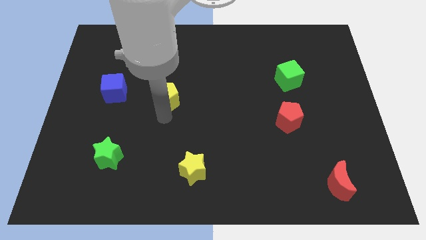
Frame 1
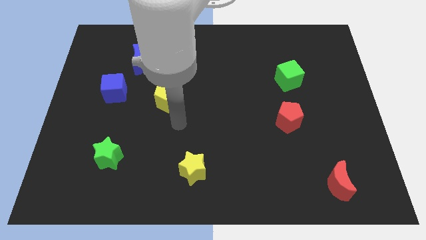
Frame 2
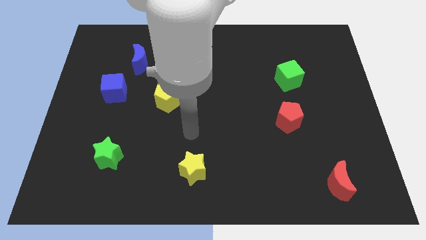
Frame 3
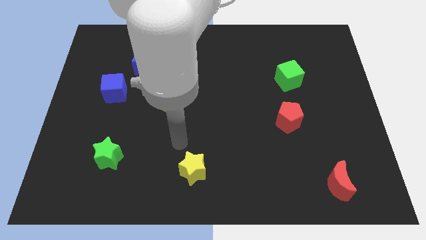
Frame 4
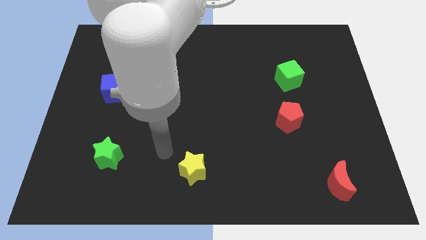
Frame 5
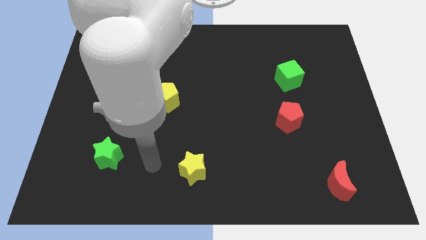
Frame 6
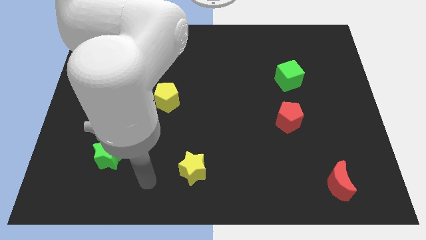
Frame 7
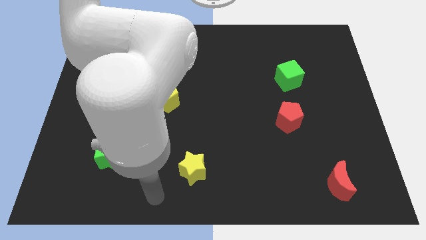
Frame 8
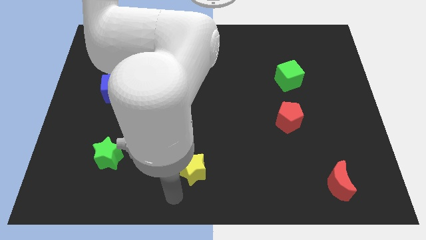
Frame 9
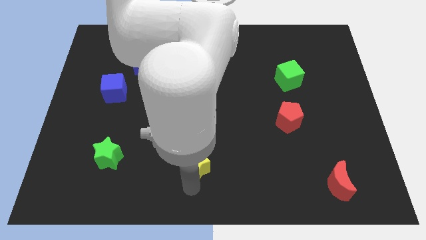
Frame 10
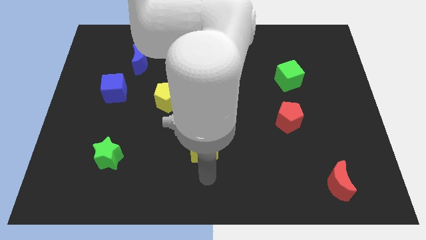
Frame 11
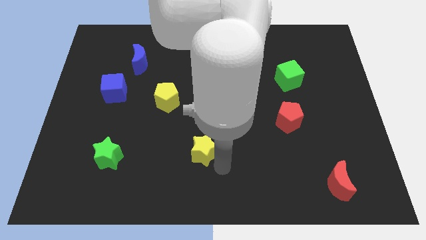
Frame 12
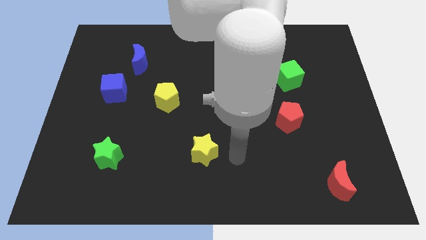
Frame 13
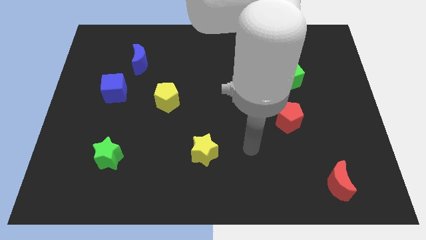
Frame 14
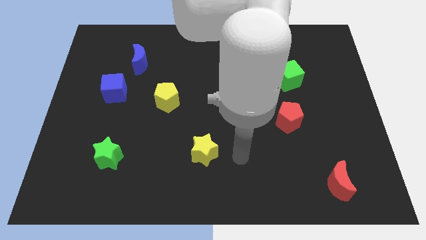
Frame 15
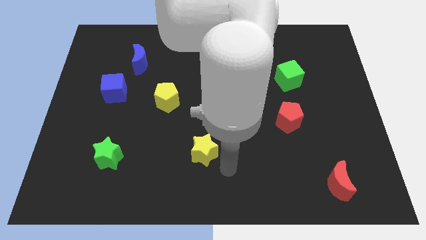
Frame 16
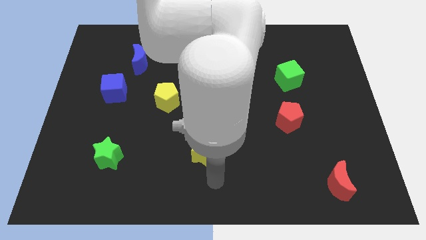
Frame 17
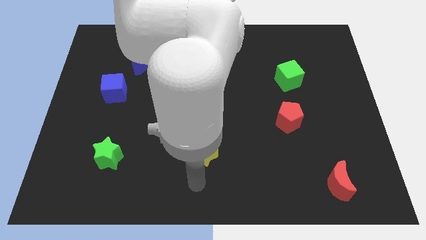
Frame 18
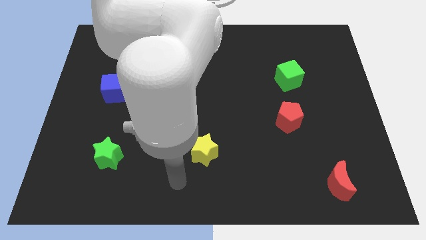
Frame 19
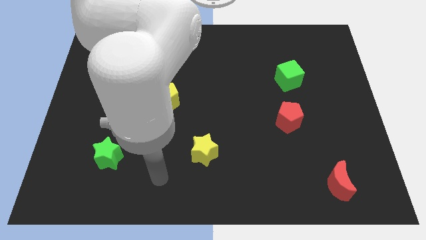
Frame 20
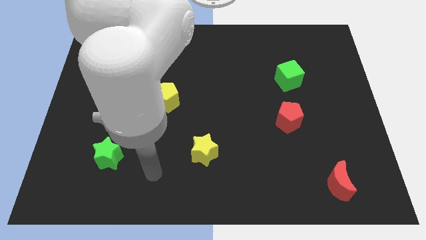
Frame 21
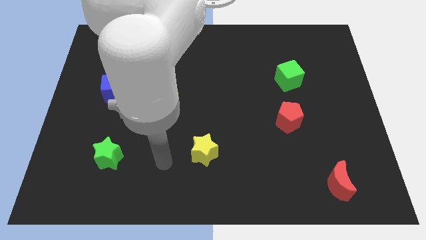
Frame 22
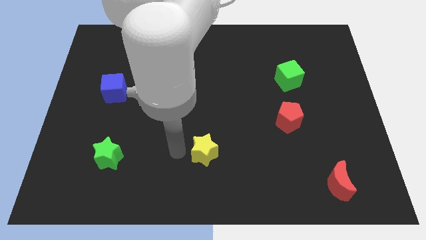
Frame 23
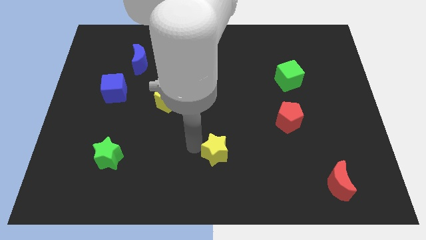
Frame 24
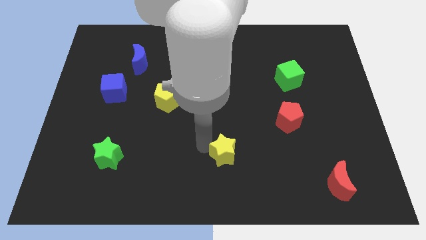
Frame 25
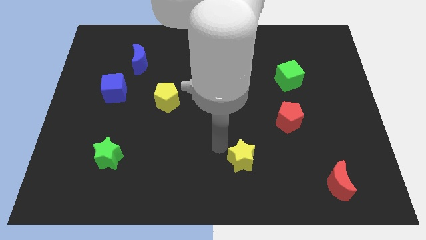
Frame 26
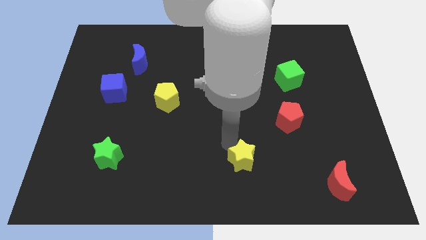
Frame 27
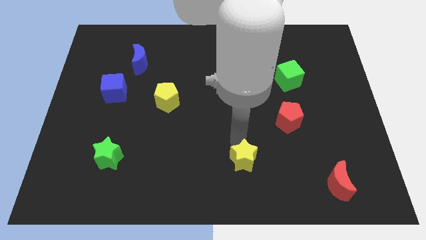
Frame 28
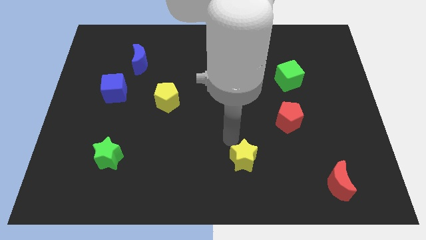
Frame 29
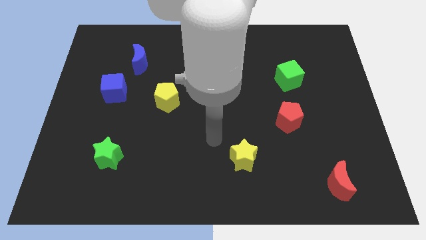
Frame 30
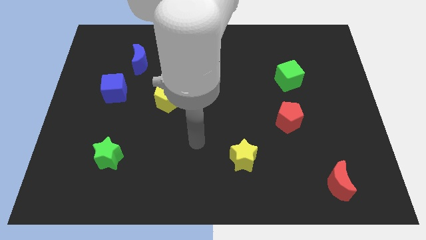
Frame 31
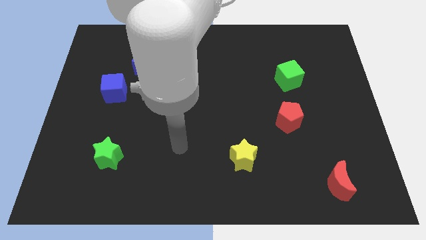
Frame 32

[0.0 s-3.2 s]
push the yellow star to the right

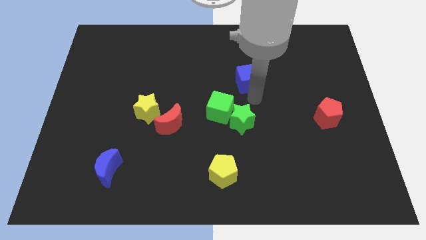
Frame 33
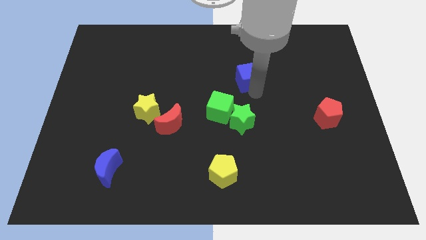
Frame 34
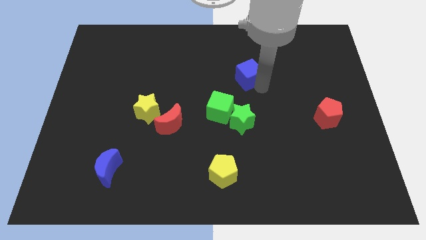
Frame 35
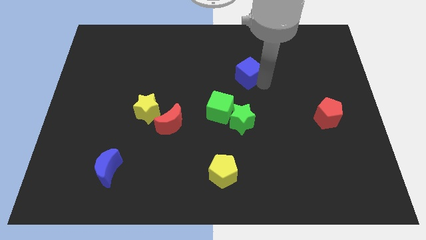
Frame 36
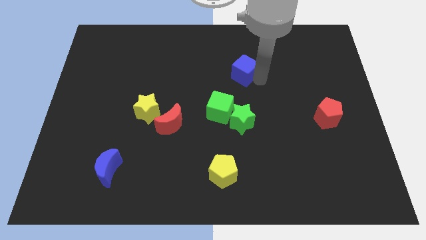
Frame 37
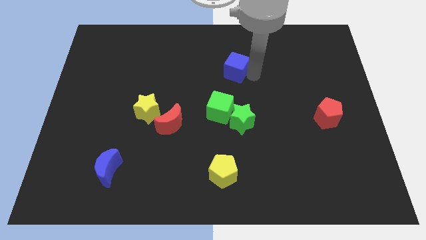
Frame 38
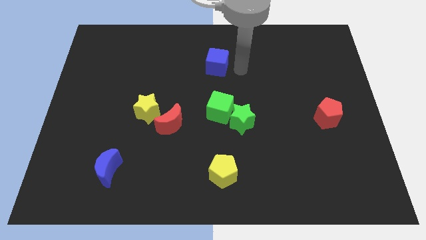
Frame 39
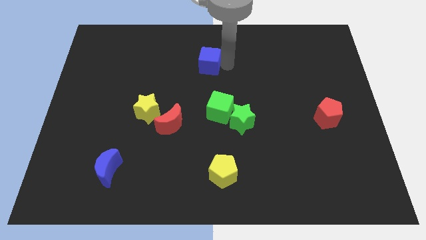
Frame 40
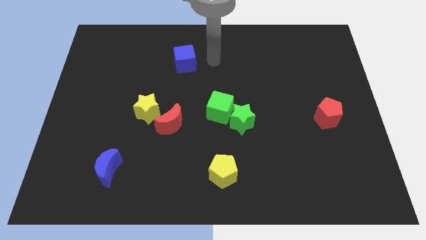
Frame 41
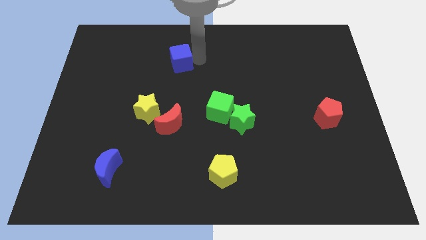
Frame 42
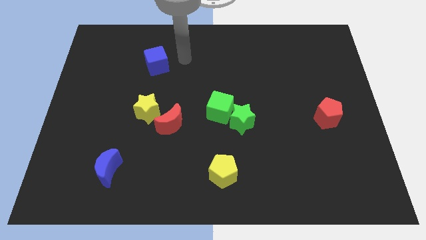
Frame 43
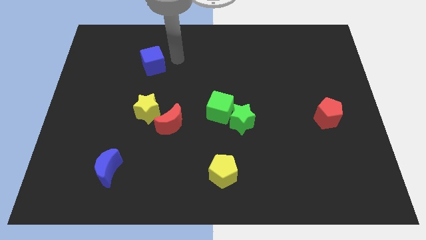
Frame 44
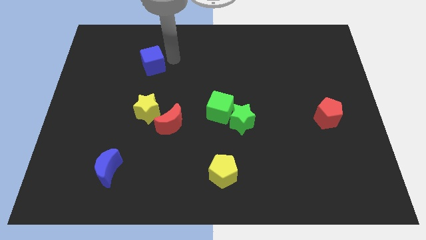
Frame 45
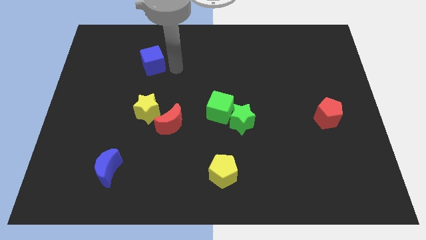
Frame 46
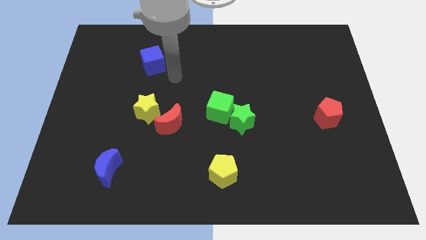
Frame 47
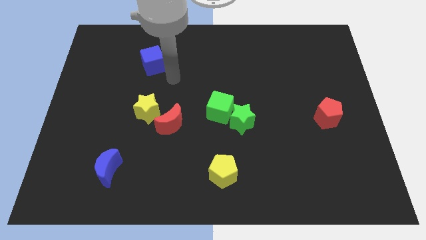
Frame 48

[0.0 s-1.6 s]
move the blue cube on top of yellow star

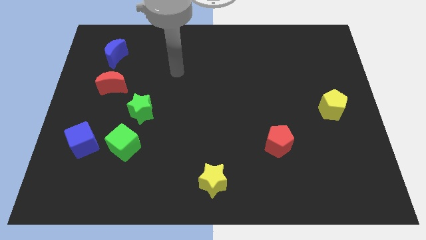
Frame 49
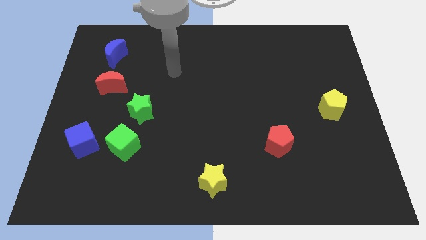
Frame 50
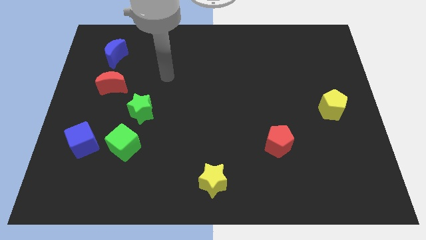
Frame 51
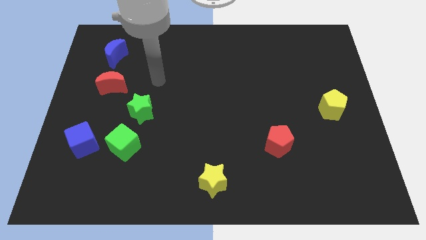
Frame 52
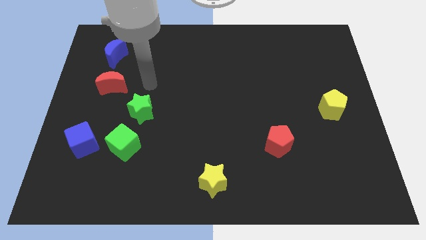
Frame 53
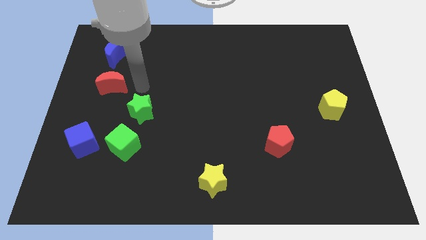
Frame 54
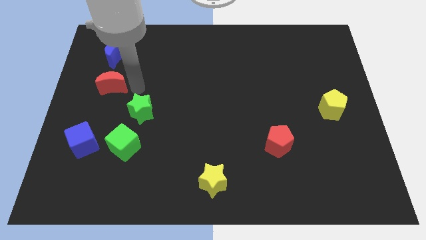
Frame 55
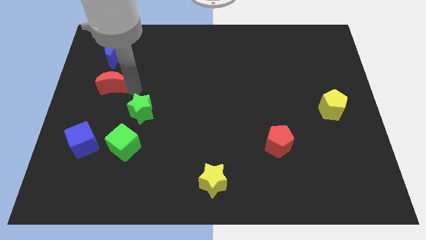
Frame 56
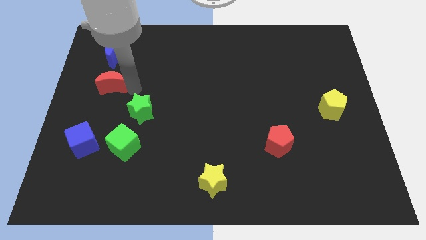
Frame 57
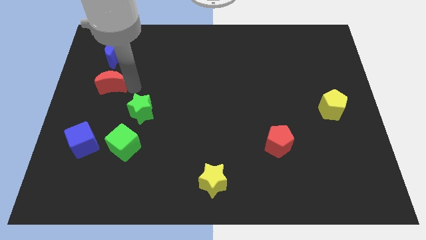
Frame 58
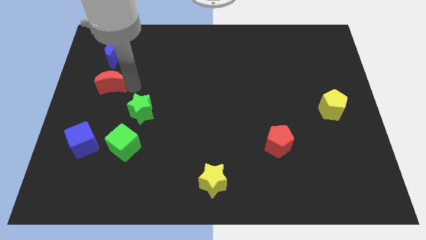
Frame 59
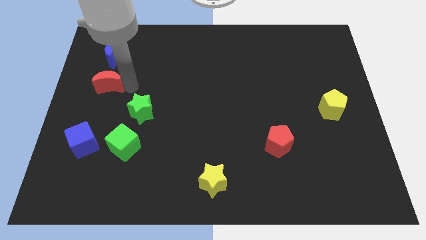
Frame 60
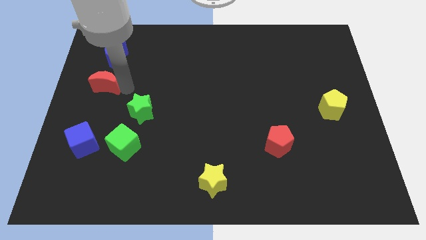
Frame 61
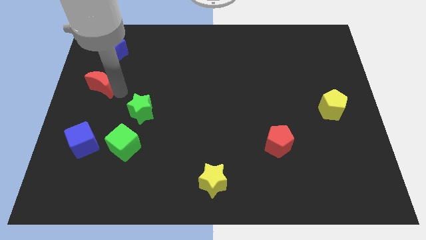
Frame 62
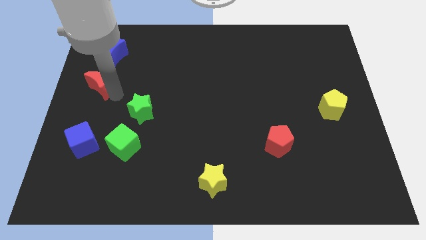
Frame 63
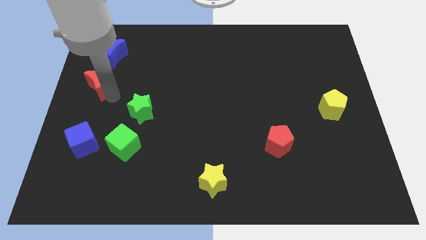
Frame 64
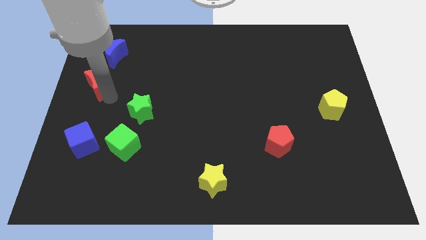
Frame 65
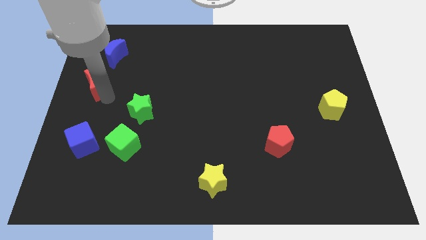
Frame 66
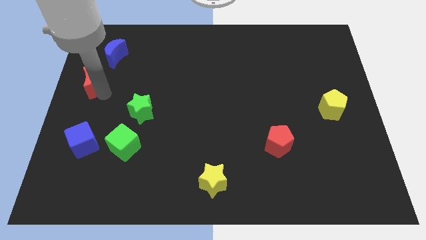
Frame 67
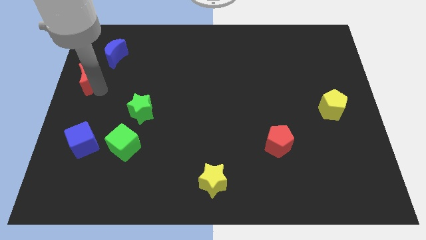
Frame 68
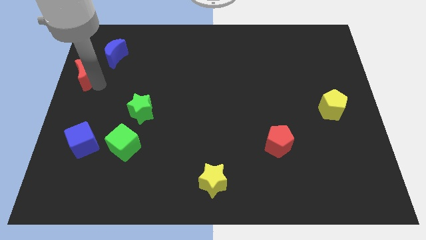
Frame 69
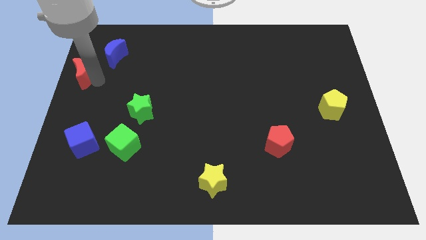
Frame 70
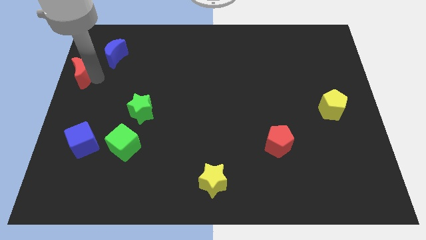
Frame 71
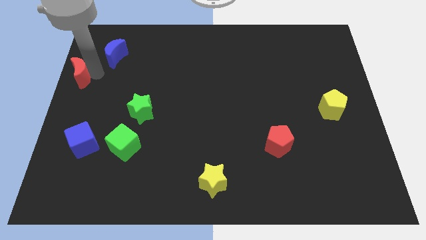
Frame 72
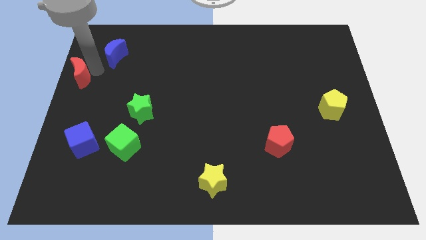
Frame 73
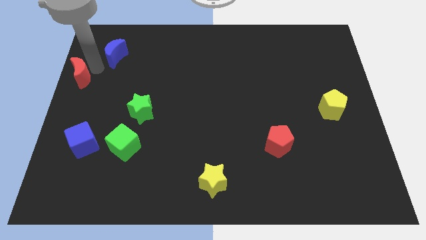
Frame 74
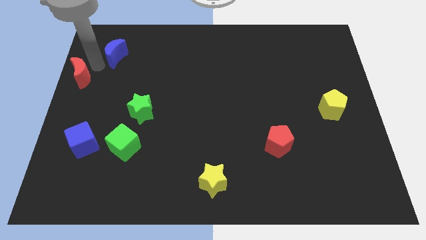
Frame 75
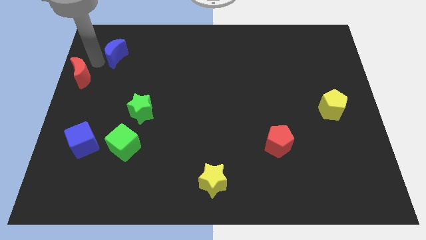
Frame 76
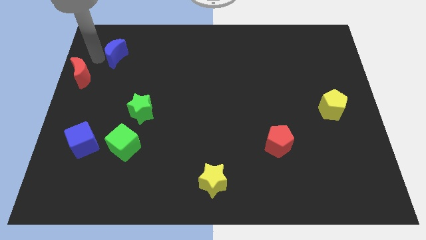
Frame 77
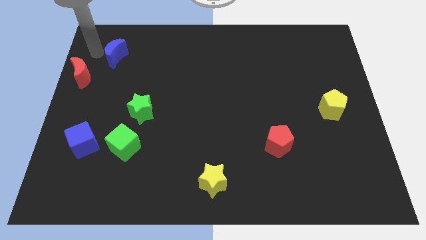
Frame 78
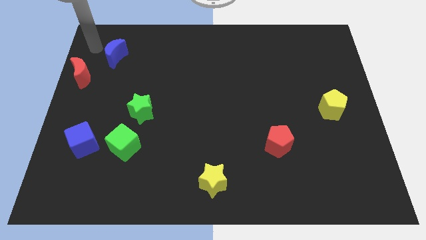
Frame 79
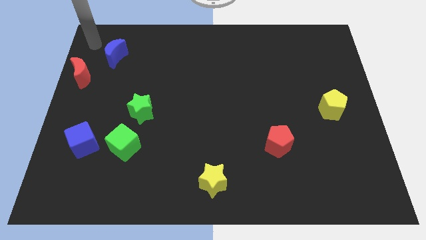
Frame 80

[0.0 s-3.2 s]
move the red crescent towards left

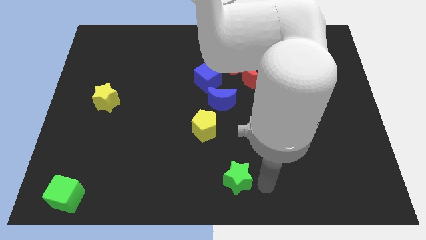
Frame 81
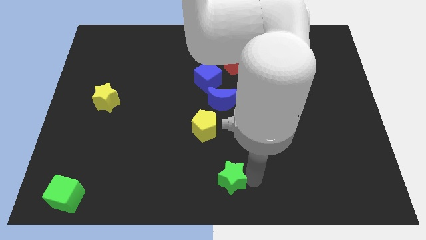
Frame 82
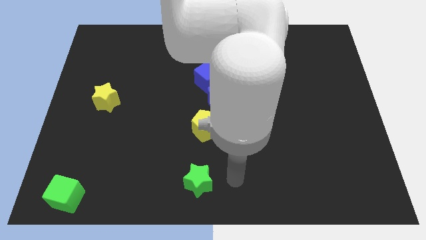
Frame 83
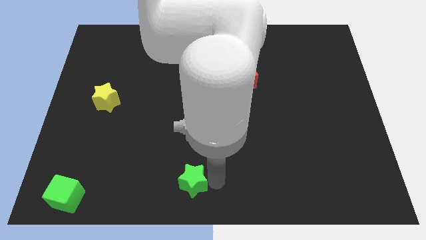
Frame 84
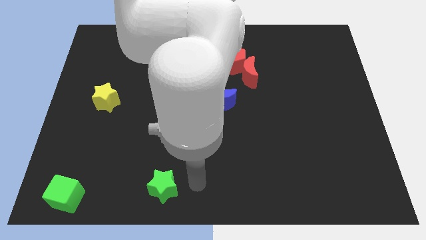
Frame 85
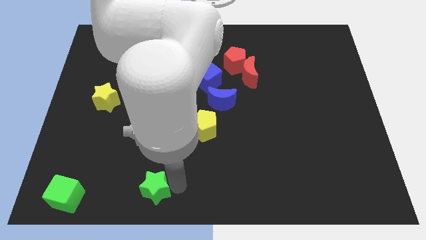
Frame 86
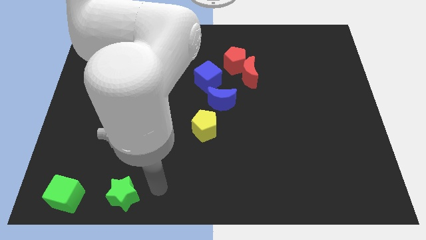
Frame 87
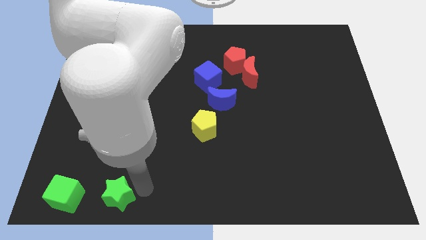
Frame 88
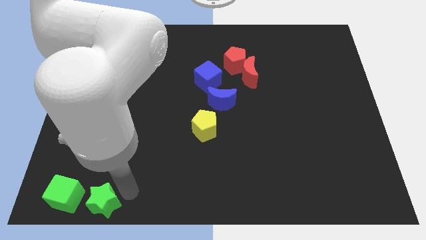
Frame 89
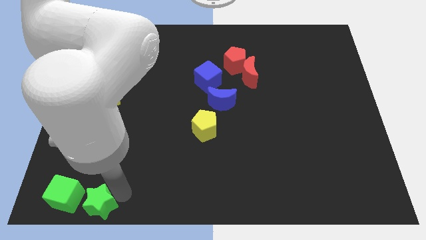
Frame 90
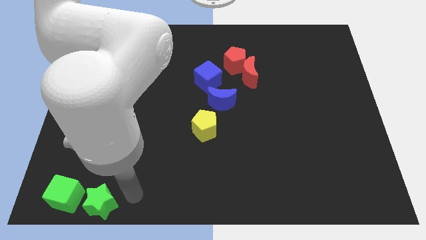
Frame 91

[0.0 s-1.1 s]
ads green star to the green cube
